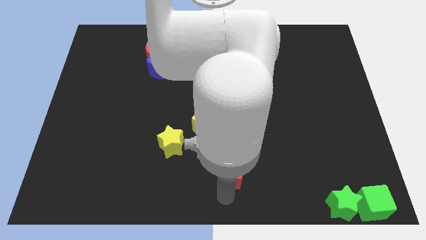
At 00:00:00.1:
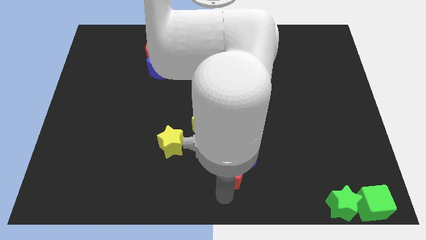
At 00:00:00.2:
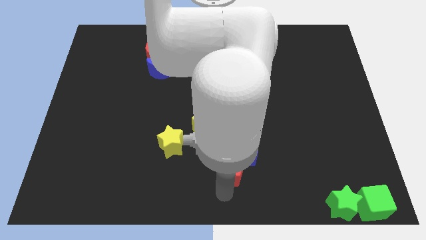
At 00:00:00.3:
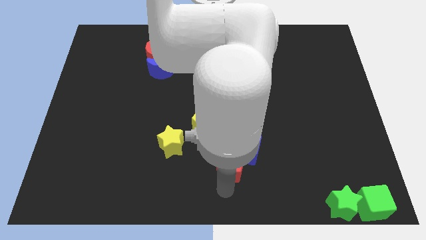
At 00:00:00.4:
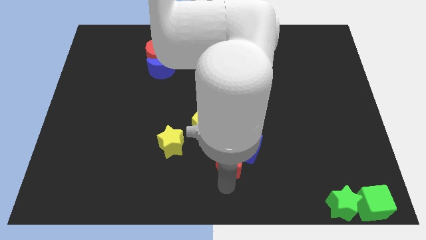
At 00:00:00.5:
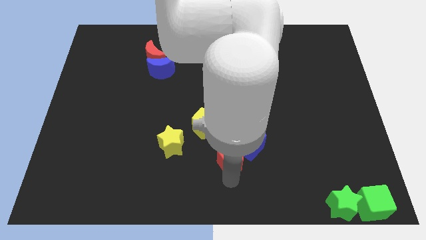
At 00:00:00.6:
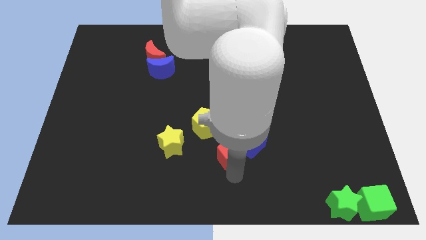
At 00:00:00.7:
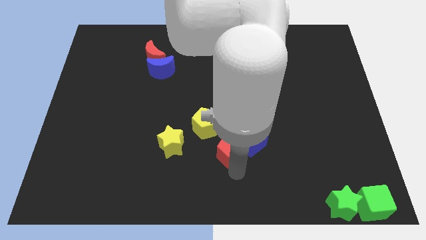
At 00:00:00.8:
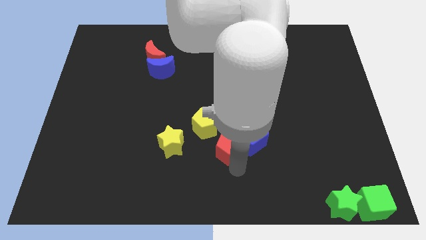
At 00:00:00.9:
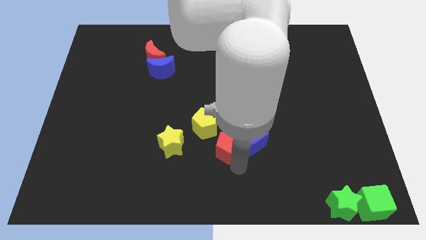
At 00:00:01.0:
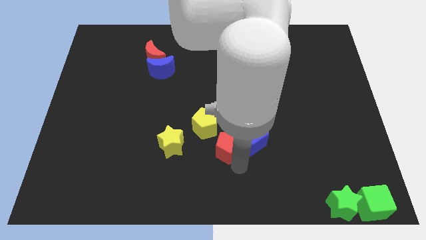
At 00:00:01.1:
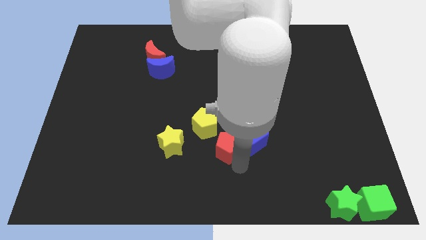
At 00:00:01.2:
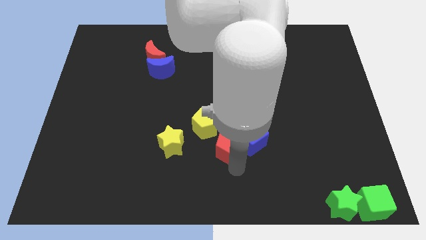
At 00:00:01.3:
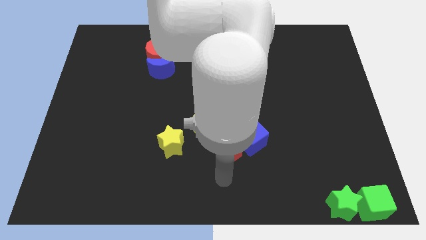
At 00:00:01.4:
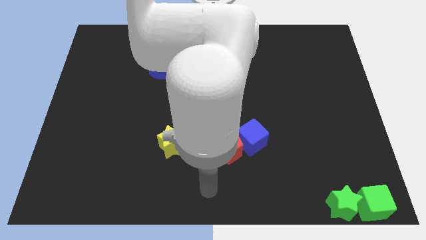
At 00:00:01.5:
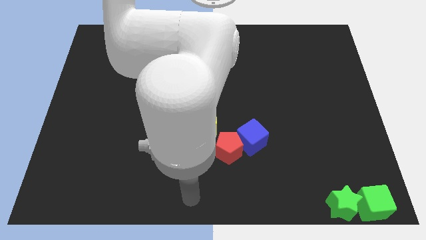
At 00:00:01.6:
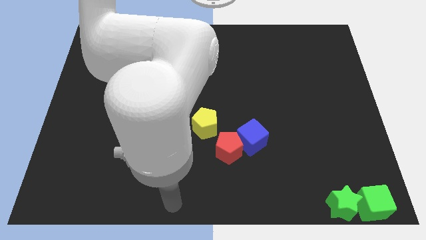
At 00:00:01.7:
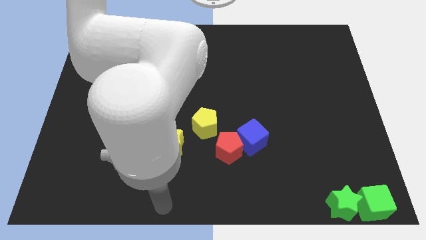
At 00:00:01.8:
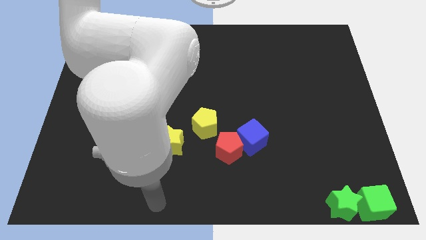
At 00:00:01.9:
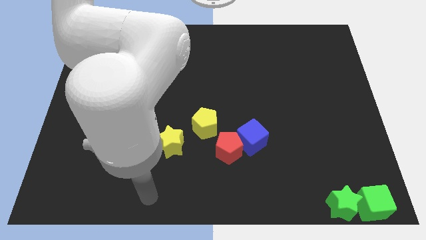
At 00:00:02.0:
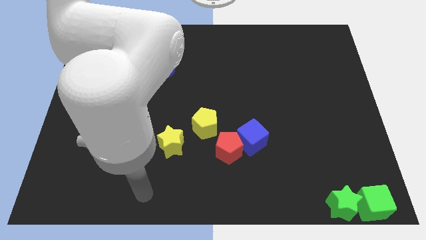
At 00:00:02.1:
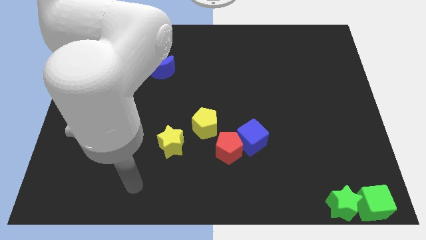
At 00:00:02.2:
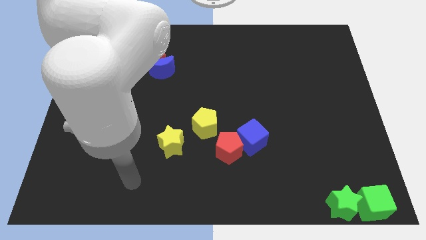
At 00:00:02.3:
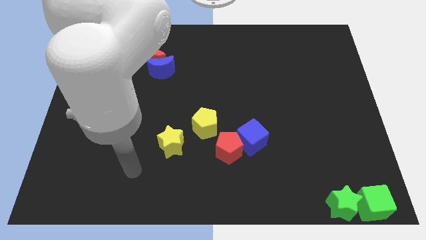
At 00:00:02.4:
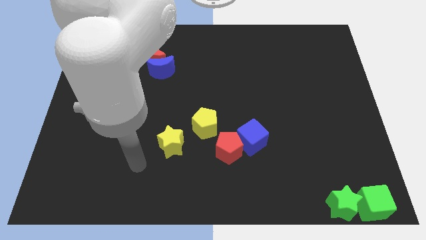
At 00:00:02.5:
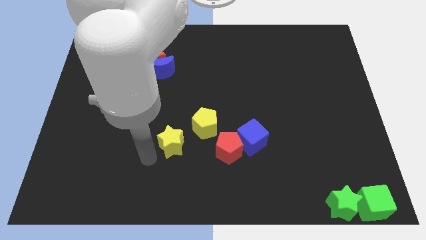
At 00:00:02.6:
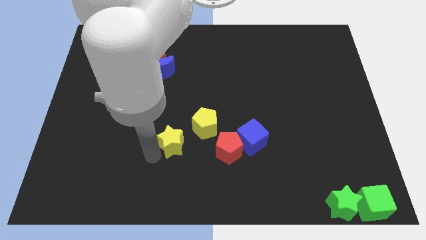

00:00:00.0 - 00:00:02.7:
move the red pentagon and blue cube slightly upwards and go away

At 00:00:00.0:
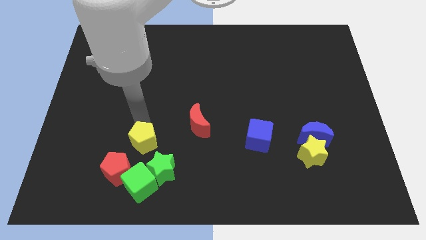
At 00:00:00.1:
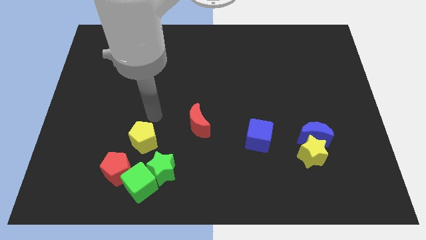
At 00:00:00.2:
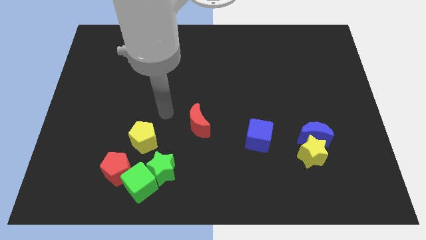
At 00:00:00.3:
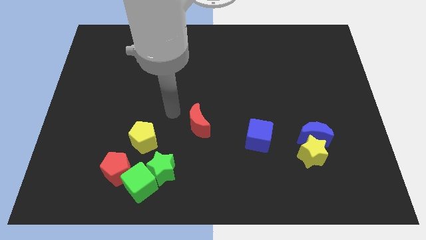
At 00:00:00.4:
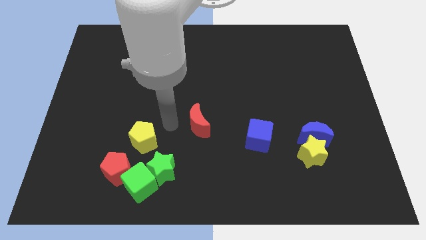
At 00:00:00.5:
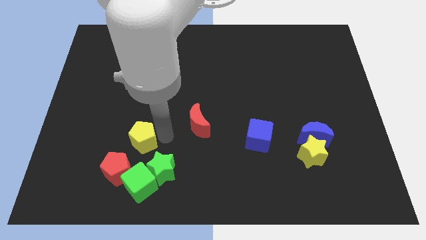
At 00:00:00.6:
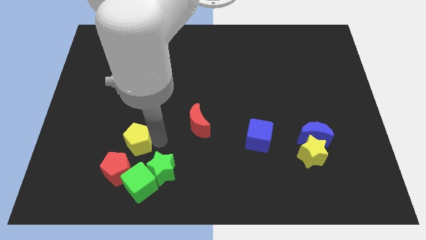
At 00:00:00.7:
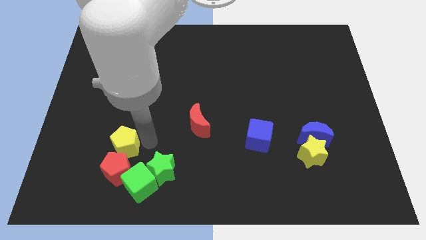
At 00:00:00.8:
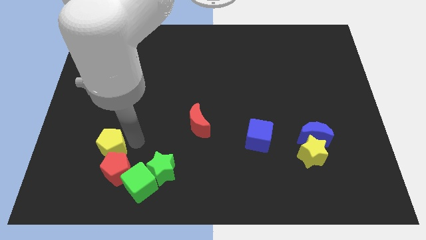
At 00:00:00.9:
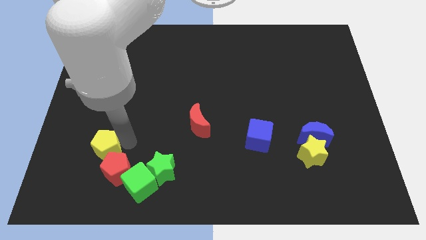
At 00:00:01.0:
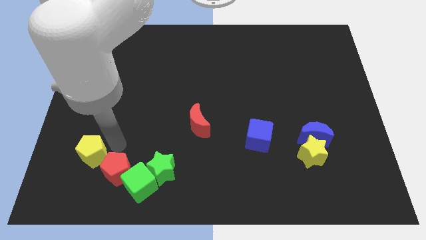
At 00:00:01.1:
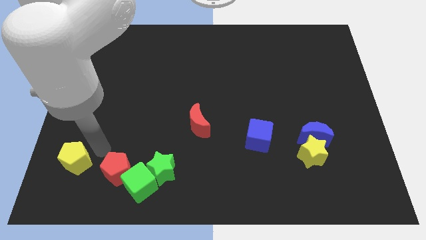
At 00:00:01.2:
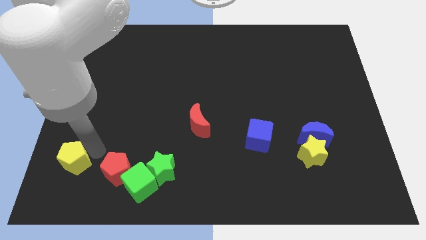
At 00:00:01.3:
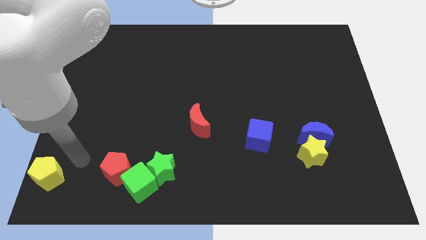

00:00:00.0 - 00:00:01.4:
place yellow pentagon left to the red pentagon

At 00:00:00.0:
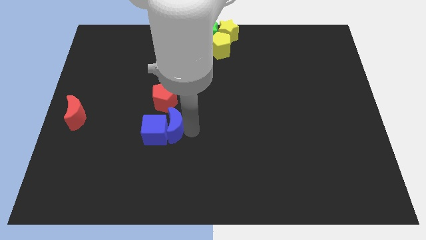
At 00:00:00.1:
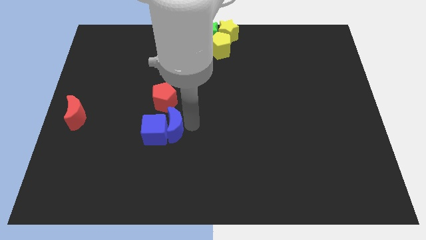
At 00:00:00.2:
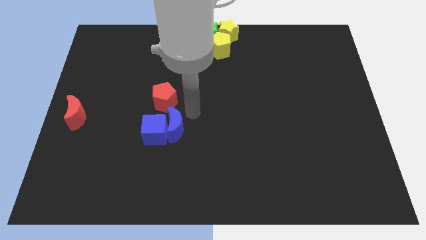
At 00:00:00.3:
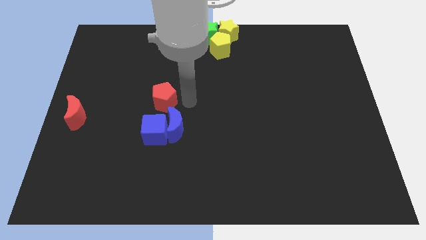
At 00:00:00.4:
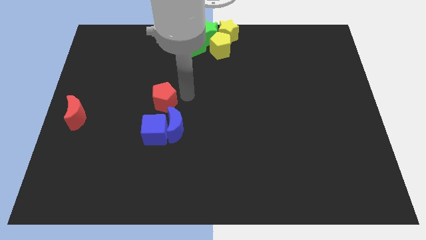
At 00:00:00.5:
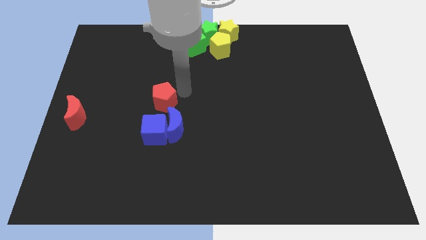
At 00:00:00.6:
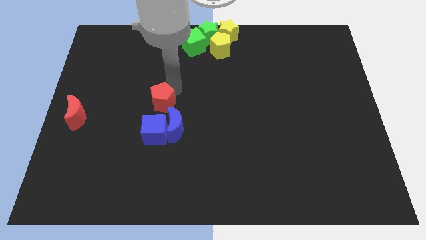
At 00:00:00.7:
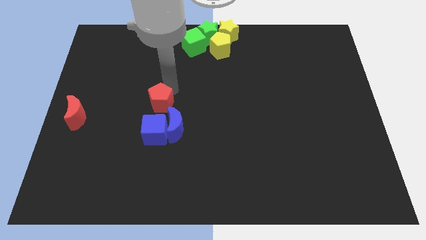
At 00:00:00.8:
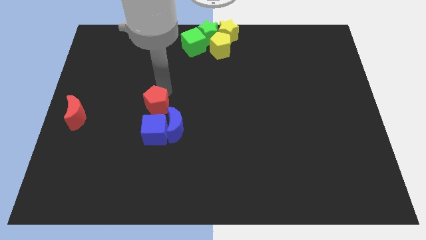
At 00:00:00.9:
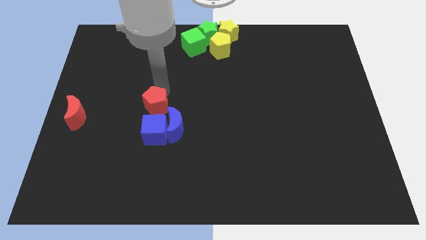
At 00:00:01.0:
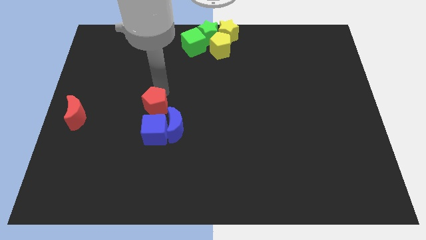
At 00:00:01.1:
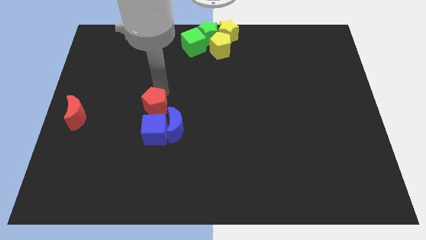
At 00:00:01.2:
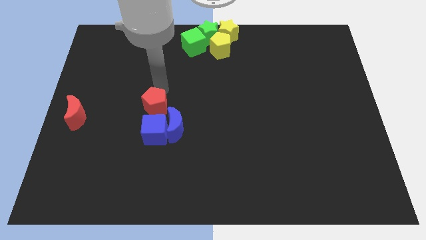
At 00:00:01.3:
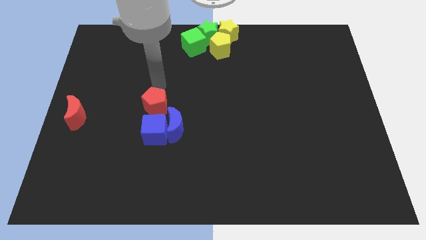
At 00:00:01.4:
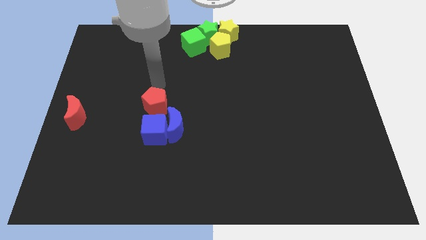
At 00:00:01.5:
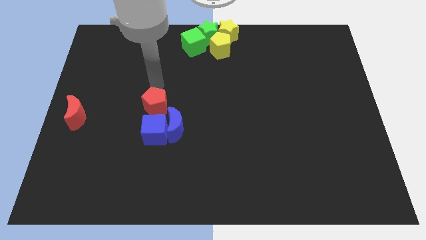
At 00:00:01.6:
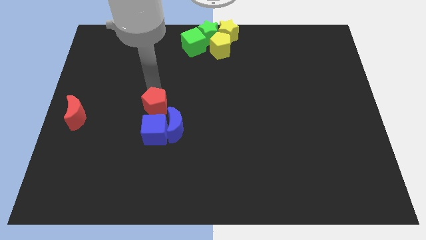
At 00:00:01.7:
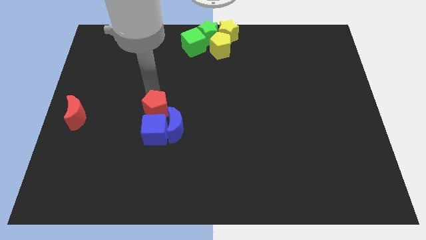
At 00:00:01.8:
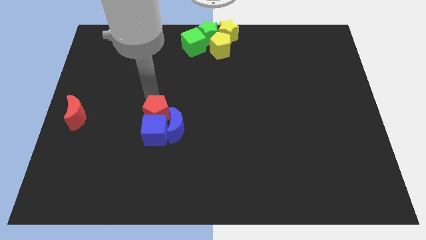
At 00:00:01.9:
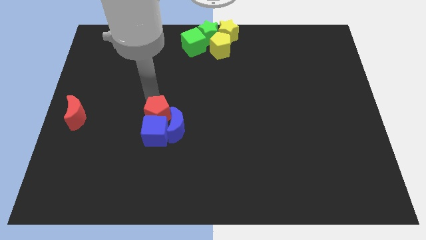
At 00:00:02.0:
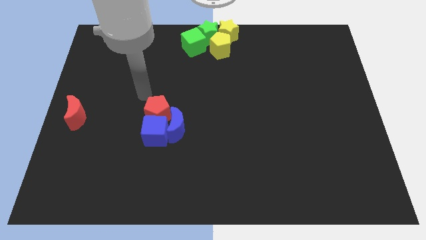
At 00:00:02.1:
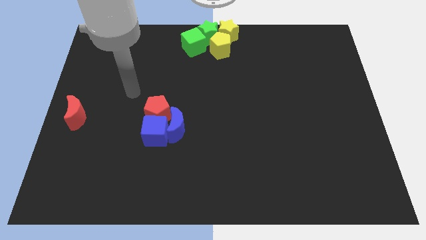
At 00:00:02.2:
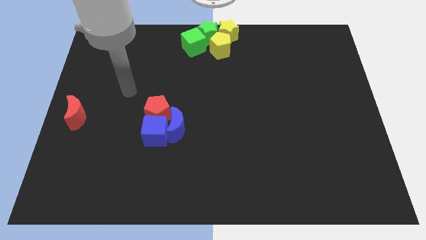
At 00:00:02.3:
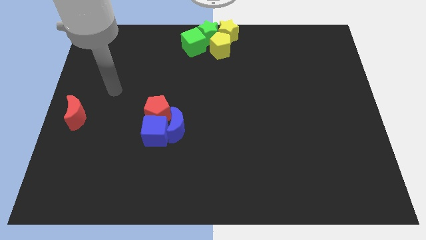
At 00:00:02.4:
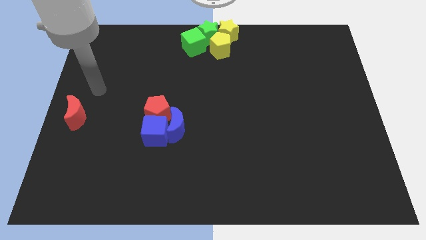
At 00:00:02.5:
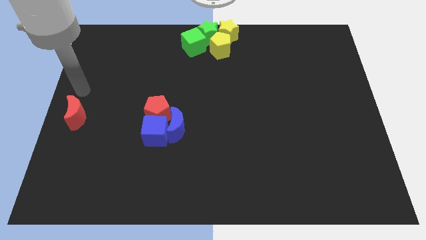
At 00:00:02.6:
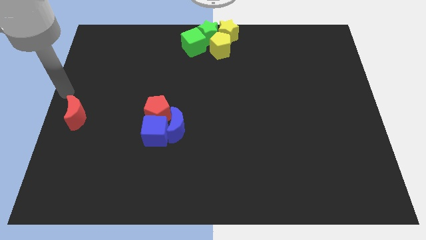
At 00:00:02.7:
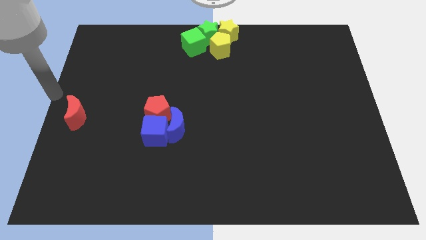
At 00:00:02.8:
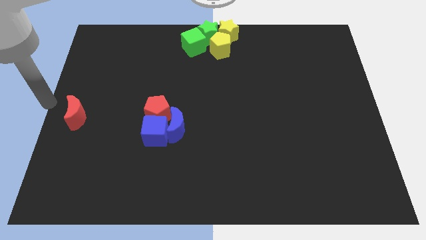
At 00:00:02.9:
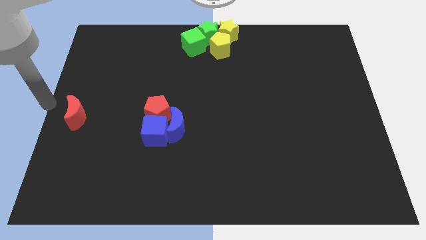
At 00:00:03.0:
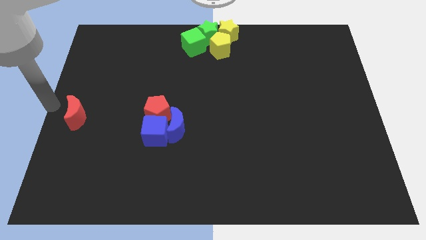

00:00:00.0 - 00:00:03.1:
push the red pentagon close to the blue cube and blue moon

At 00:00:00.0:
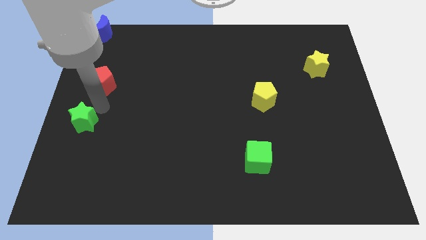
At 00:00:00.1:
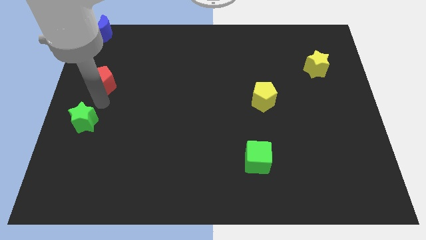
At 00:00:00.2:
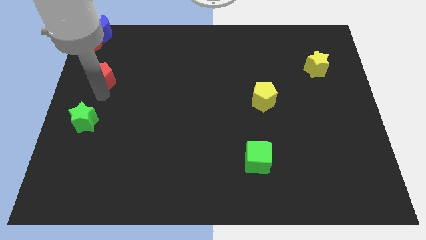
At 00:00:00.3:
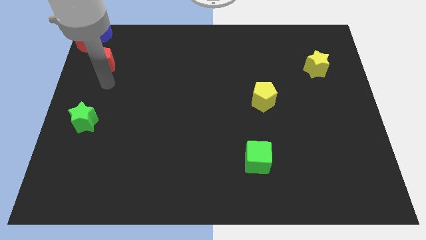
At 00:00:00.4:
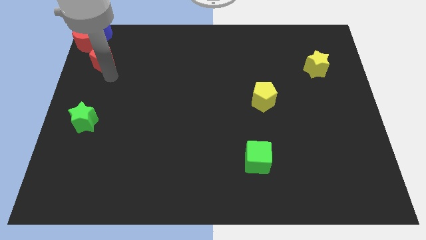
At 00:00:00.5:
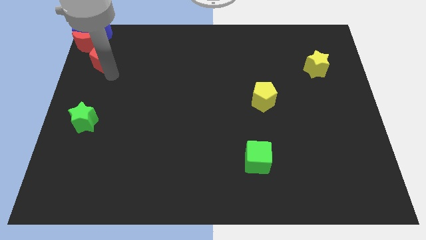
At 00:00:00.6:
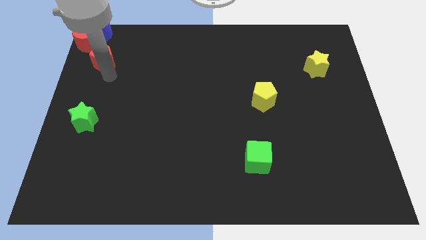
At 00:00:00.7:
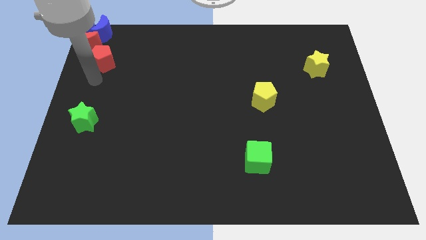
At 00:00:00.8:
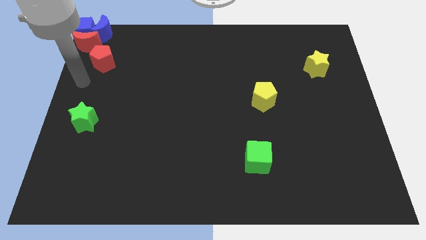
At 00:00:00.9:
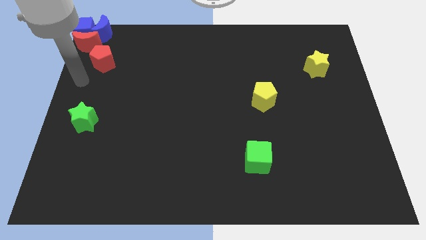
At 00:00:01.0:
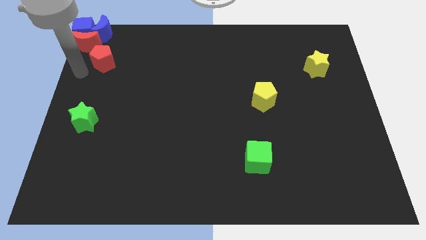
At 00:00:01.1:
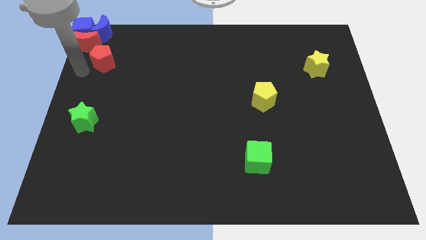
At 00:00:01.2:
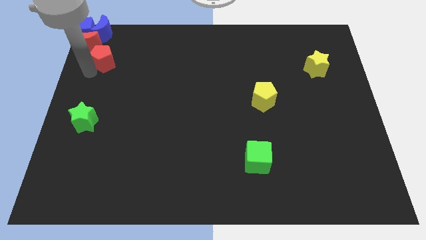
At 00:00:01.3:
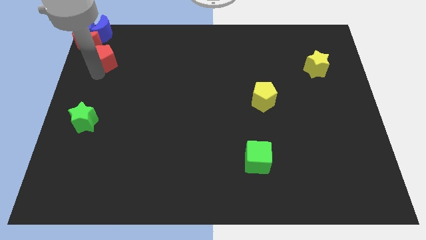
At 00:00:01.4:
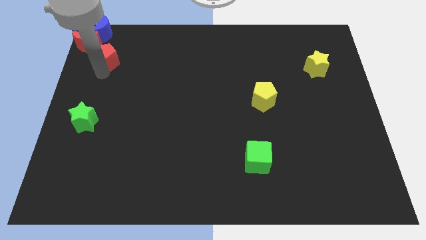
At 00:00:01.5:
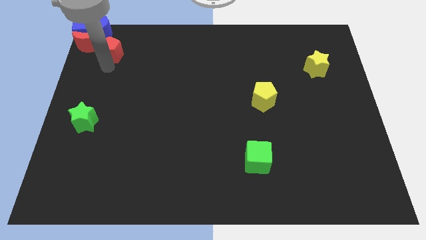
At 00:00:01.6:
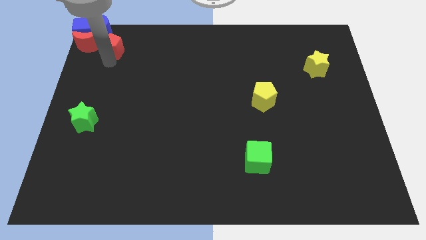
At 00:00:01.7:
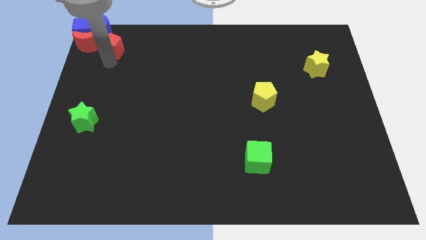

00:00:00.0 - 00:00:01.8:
move the red pentagon to the right of the red crescent
